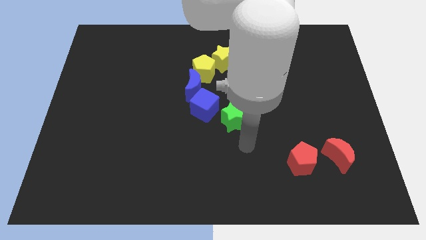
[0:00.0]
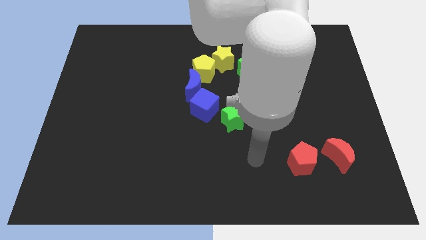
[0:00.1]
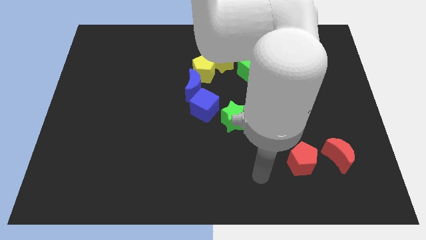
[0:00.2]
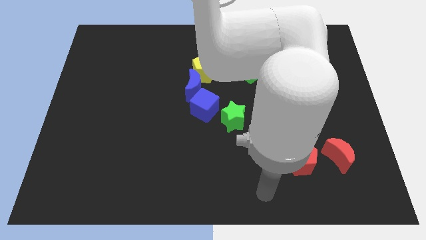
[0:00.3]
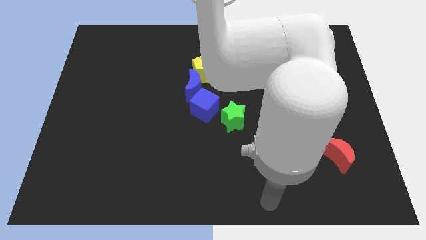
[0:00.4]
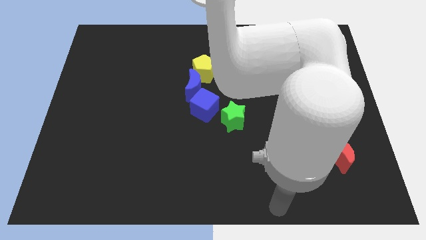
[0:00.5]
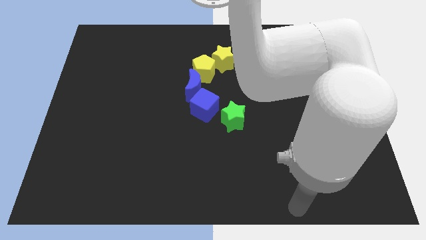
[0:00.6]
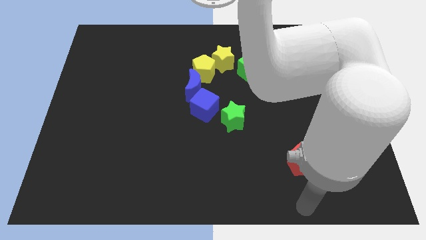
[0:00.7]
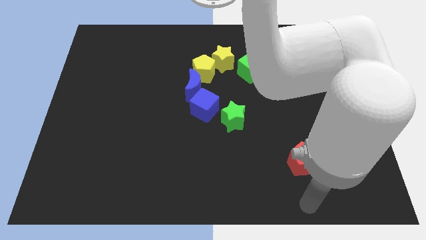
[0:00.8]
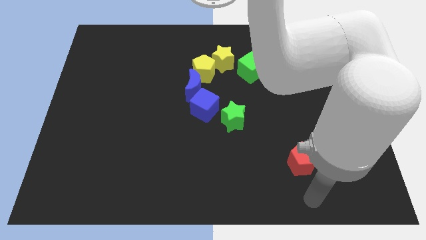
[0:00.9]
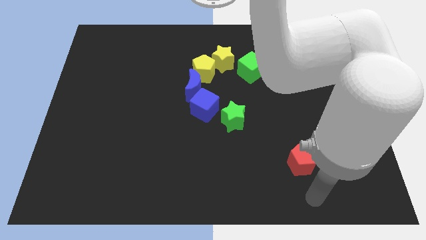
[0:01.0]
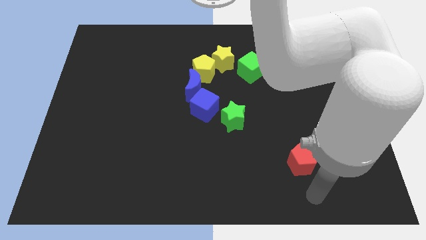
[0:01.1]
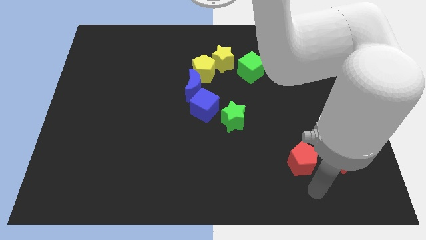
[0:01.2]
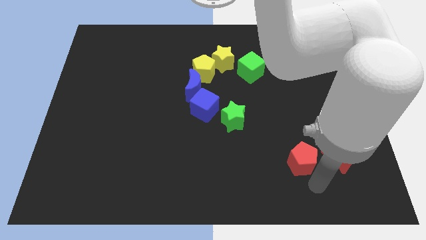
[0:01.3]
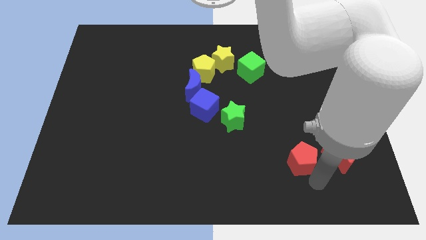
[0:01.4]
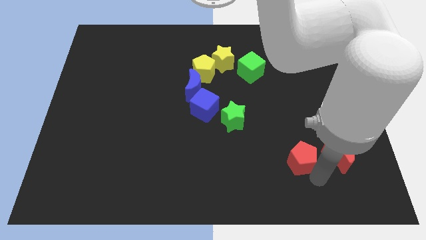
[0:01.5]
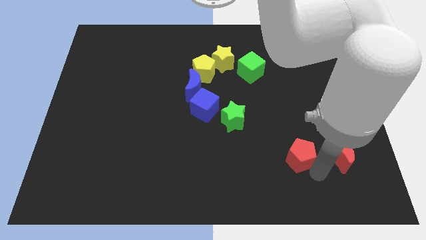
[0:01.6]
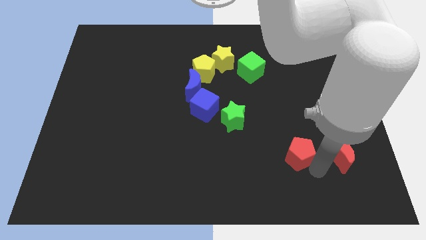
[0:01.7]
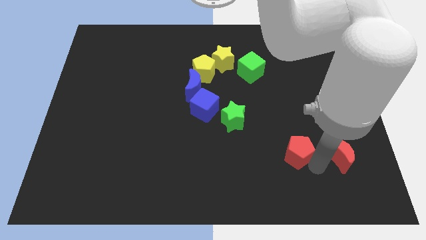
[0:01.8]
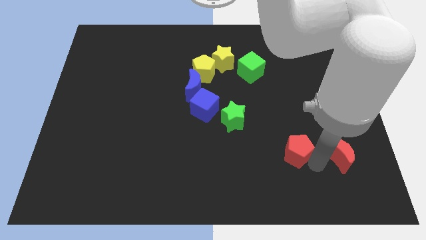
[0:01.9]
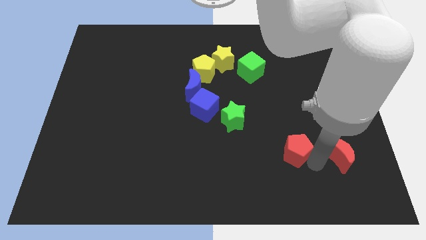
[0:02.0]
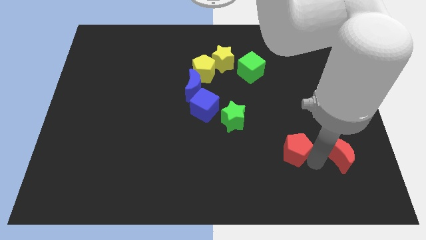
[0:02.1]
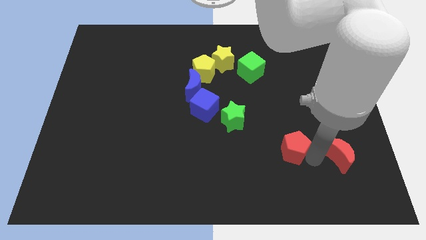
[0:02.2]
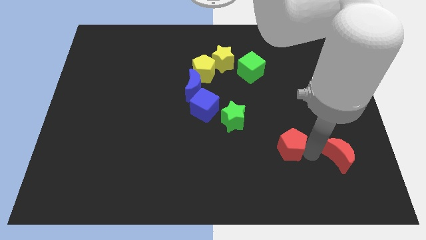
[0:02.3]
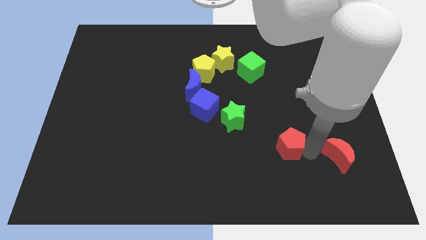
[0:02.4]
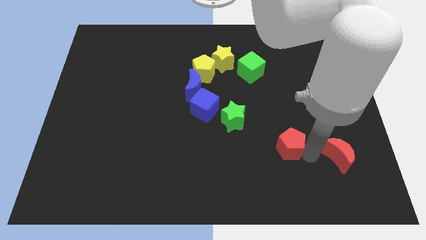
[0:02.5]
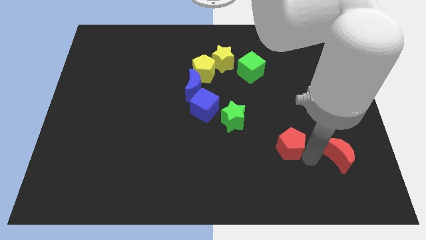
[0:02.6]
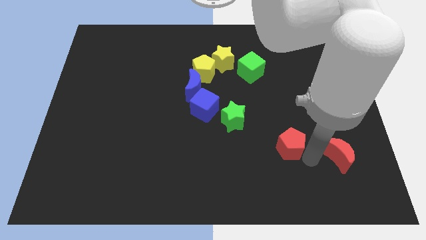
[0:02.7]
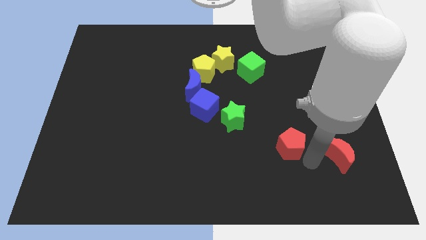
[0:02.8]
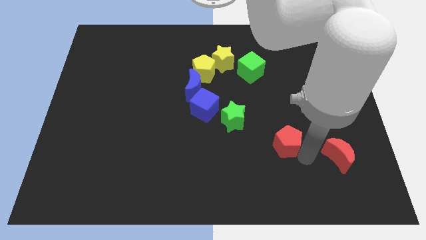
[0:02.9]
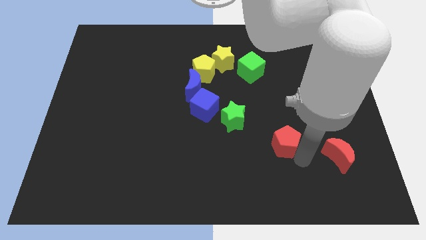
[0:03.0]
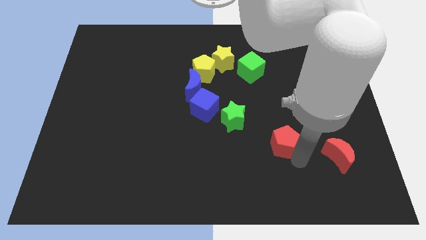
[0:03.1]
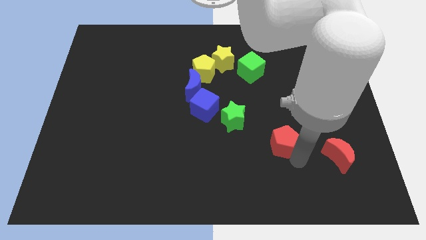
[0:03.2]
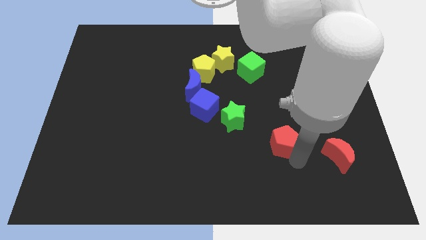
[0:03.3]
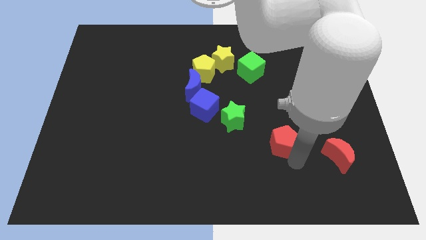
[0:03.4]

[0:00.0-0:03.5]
move the red pentagon slightly towards the green star

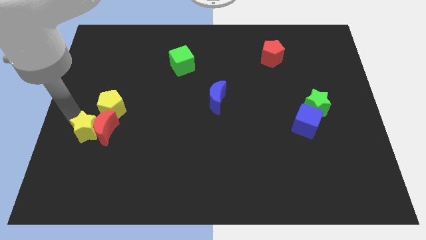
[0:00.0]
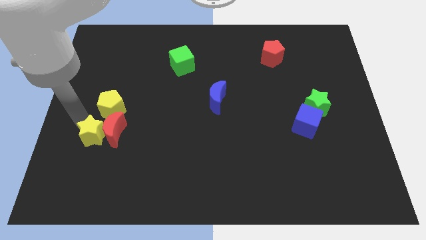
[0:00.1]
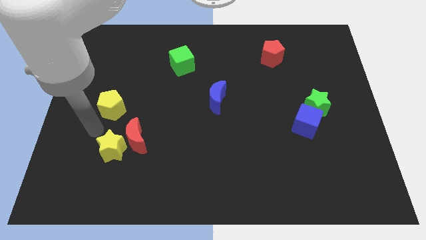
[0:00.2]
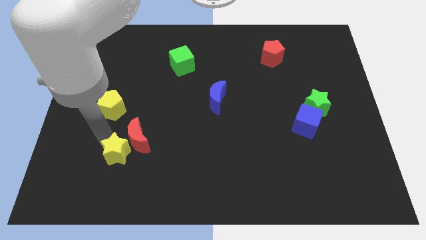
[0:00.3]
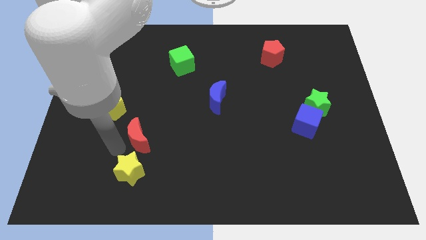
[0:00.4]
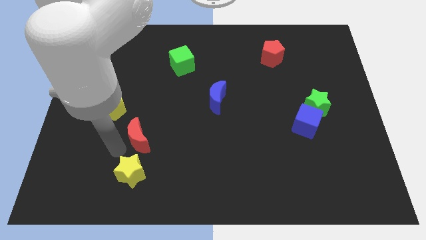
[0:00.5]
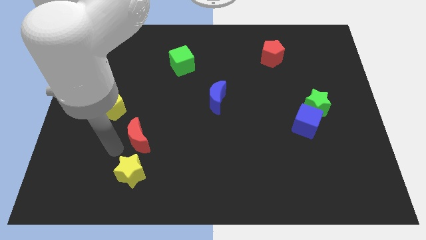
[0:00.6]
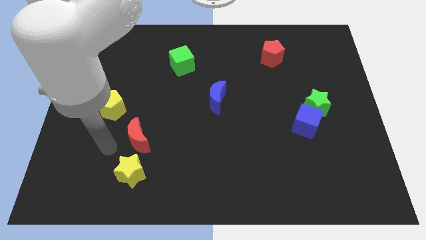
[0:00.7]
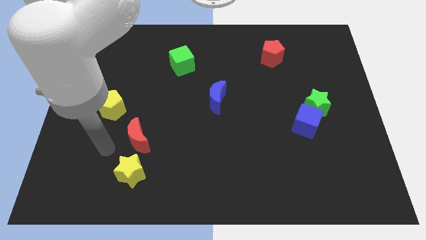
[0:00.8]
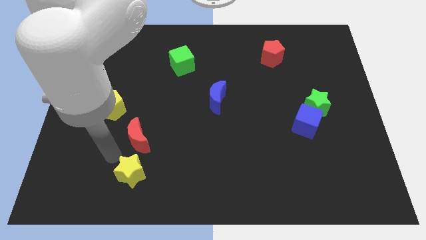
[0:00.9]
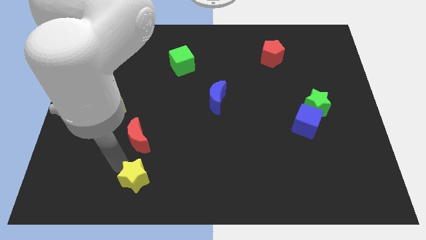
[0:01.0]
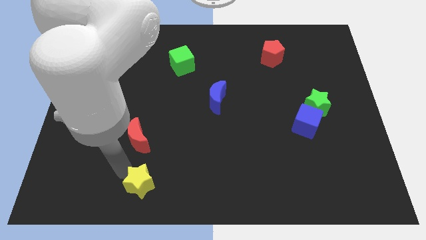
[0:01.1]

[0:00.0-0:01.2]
move yellow star below red moon

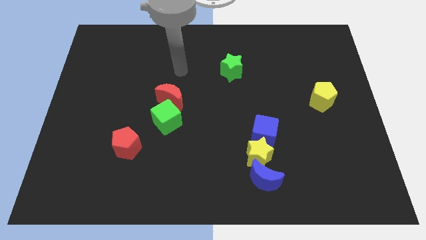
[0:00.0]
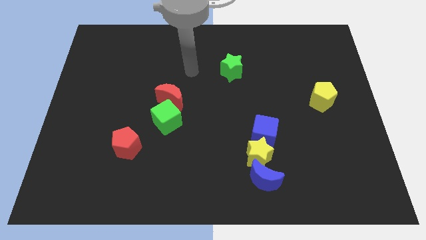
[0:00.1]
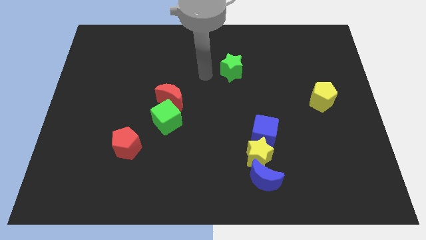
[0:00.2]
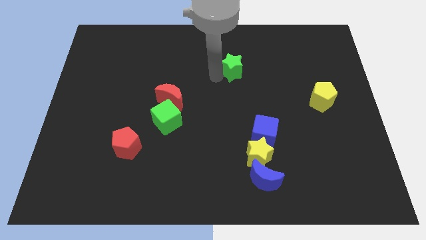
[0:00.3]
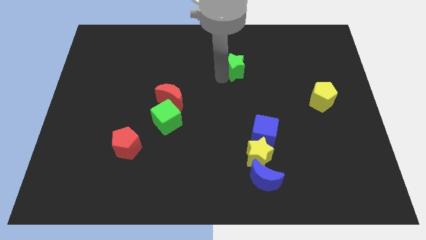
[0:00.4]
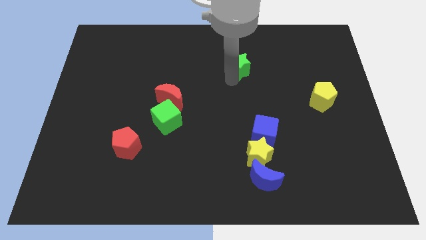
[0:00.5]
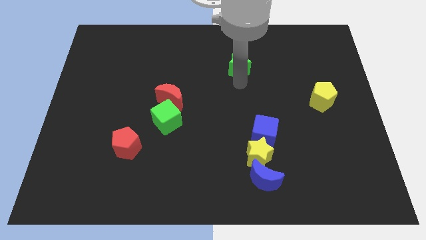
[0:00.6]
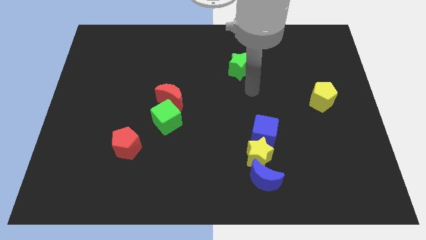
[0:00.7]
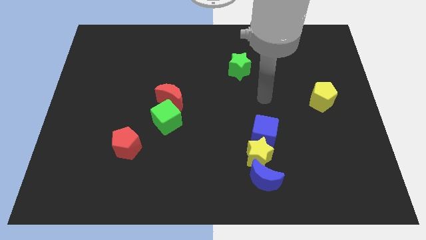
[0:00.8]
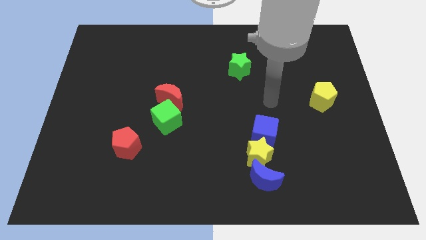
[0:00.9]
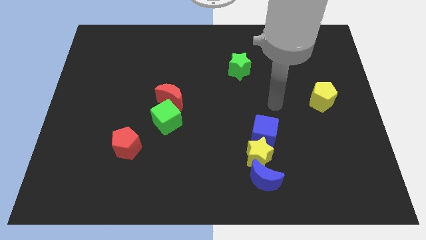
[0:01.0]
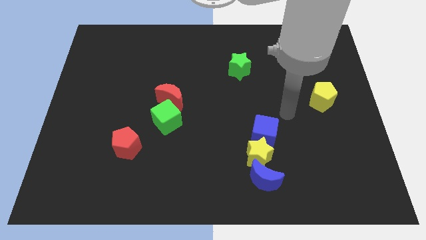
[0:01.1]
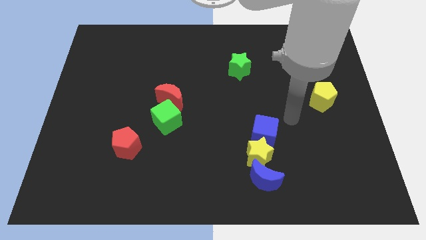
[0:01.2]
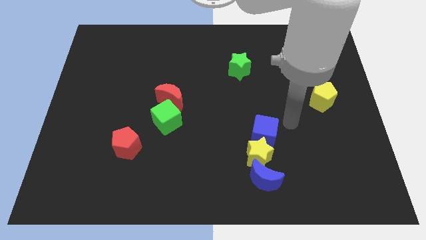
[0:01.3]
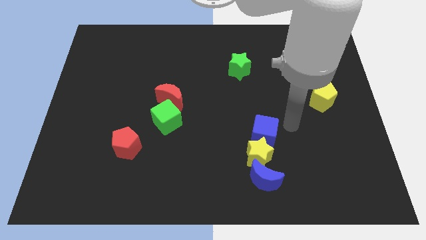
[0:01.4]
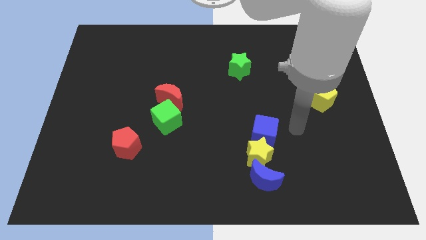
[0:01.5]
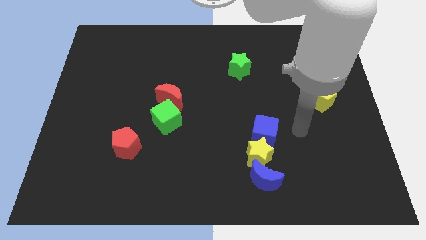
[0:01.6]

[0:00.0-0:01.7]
while touch the green star move your arm to the three other blocks

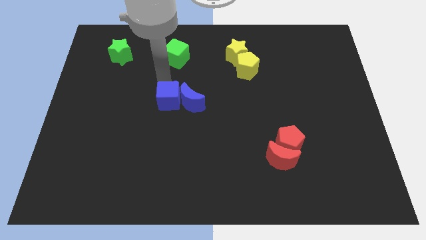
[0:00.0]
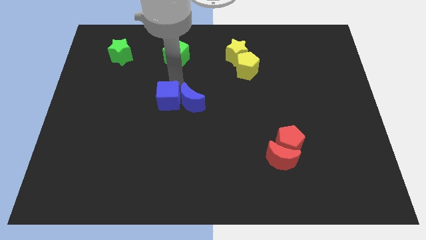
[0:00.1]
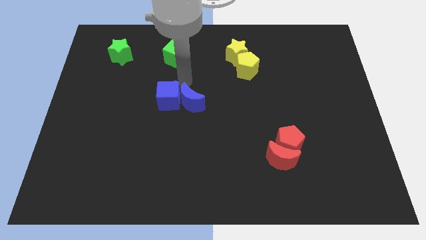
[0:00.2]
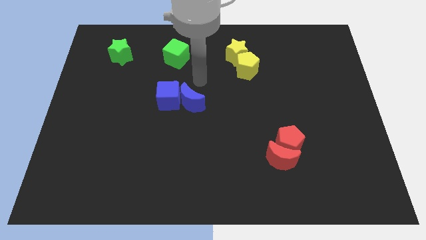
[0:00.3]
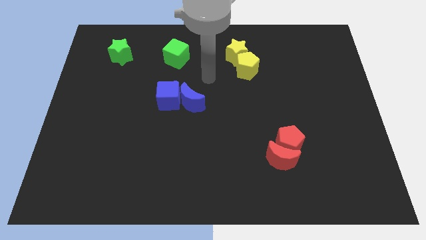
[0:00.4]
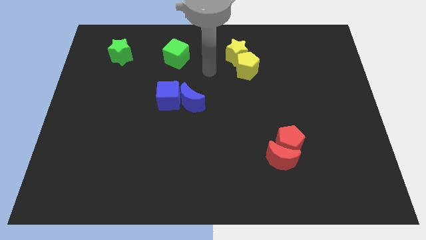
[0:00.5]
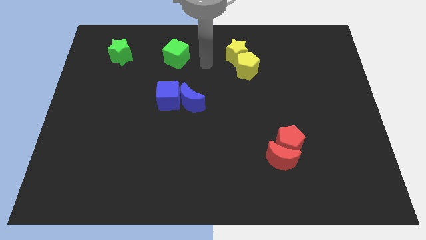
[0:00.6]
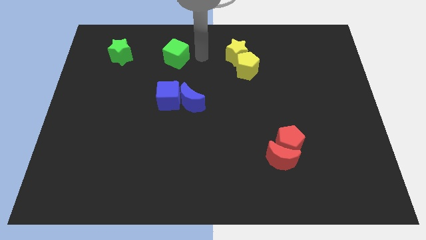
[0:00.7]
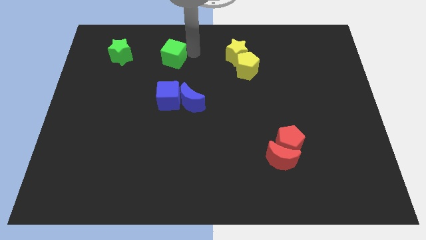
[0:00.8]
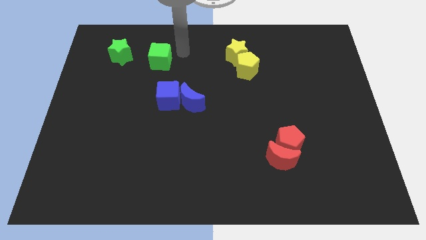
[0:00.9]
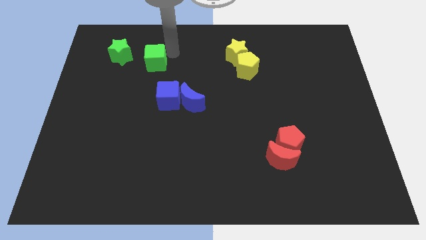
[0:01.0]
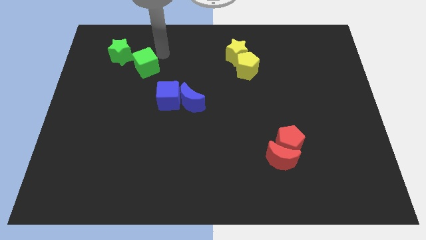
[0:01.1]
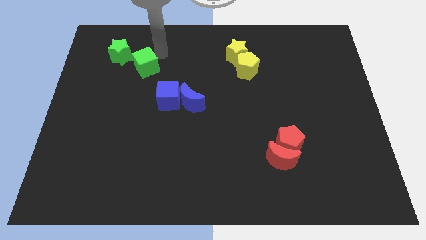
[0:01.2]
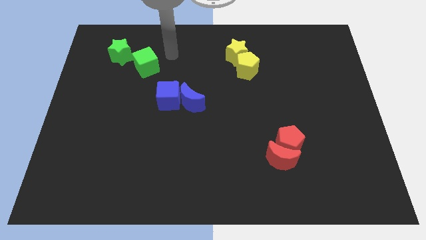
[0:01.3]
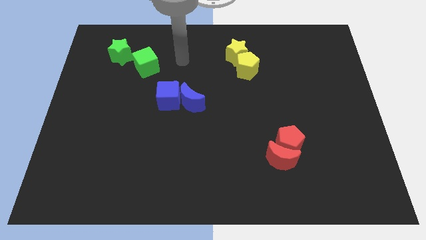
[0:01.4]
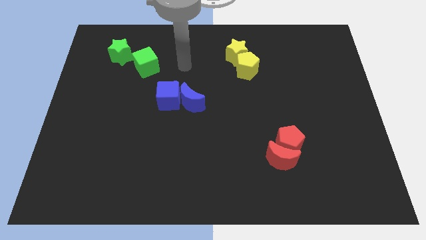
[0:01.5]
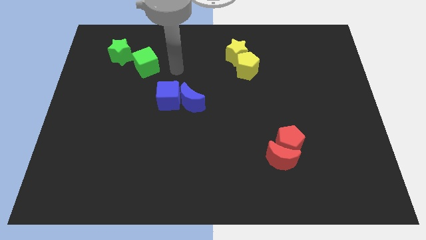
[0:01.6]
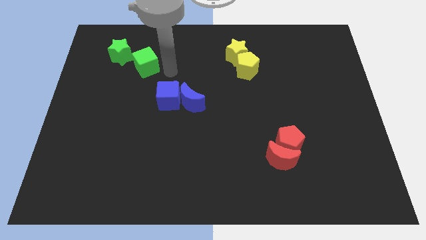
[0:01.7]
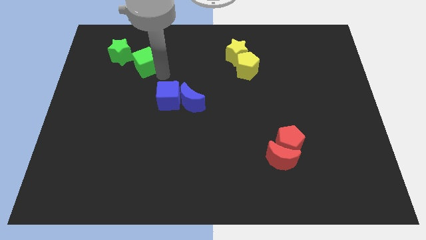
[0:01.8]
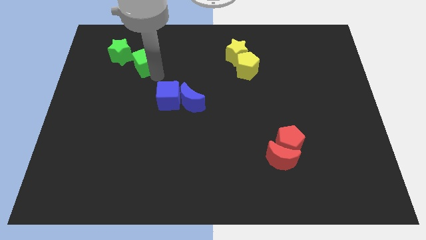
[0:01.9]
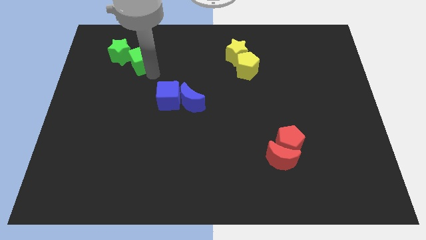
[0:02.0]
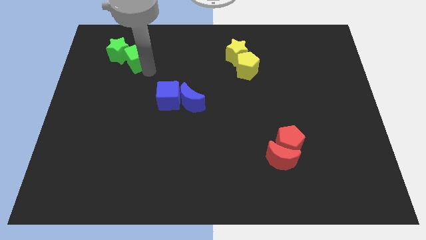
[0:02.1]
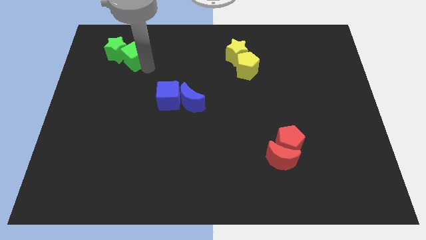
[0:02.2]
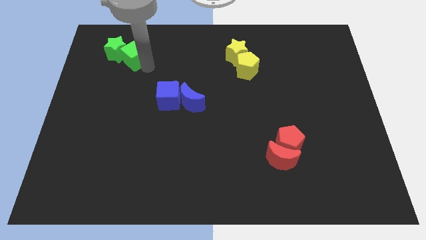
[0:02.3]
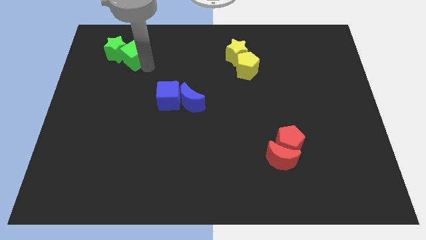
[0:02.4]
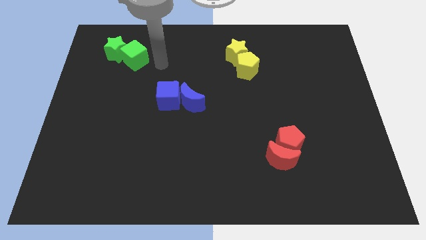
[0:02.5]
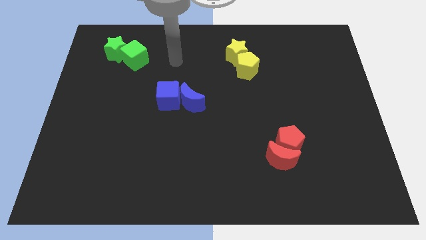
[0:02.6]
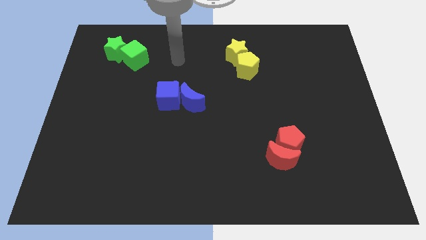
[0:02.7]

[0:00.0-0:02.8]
push the green cube below the green star
